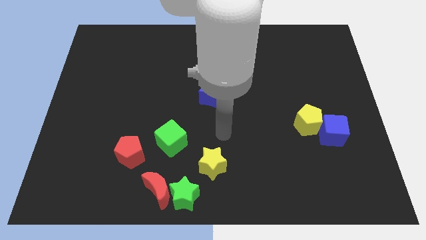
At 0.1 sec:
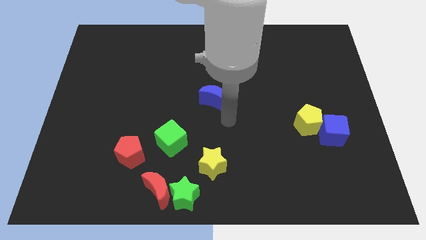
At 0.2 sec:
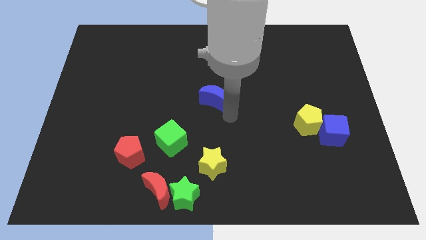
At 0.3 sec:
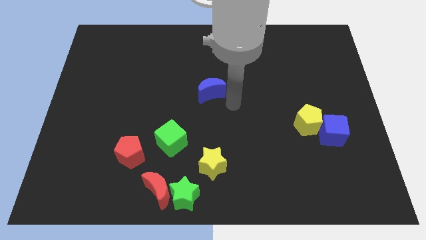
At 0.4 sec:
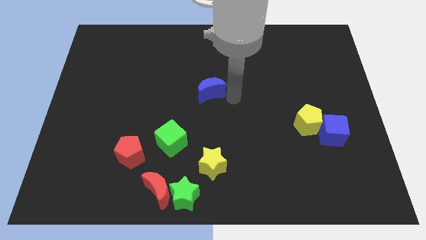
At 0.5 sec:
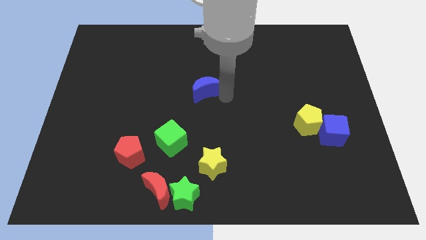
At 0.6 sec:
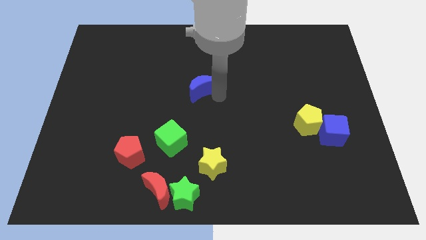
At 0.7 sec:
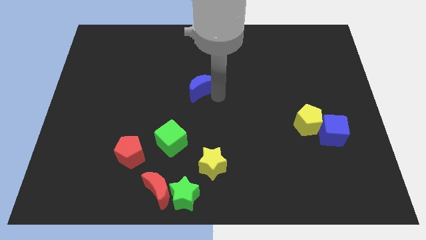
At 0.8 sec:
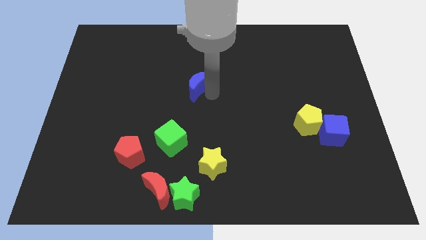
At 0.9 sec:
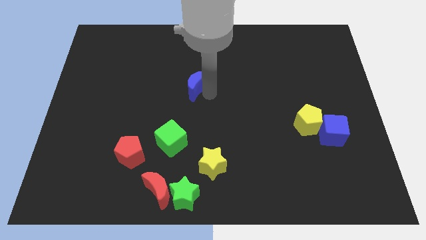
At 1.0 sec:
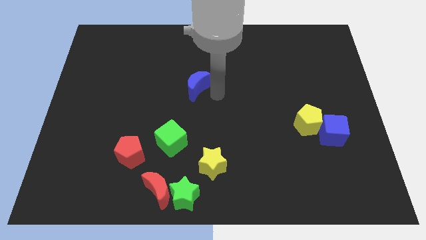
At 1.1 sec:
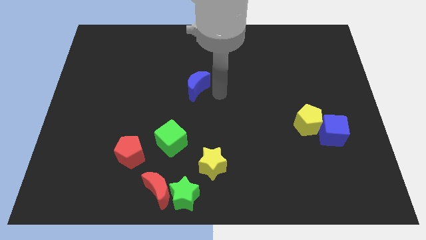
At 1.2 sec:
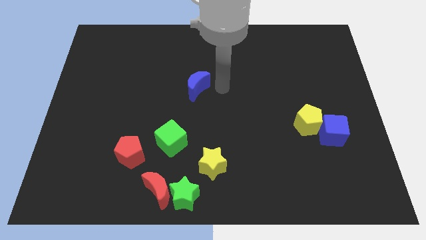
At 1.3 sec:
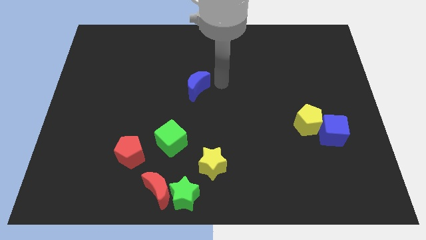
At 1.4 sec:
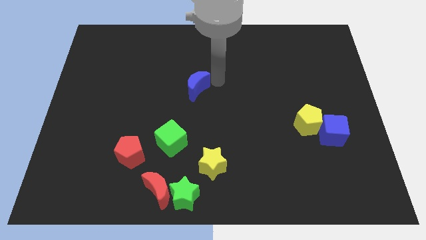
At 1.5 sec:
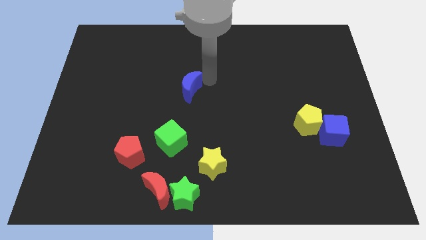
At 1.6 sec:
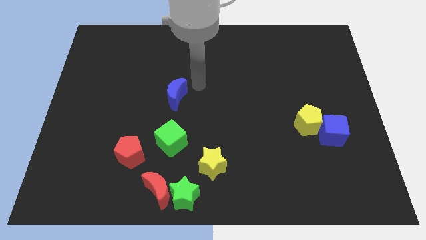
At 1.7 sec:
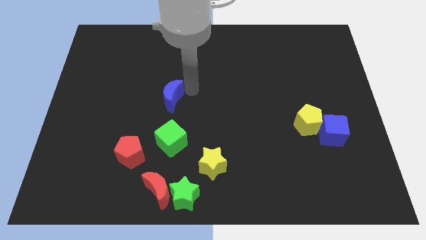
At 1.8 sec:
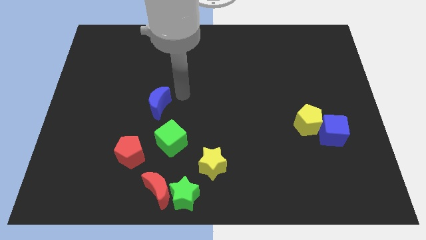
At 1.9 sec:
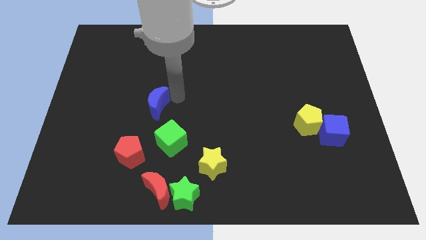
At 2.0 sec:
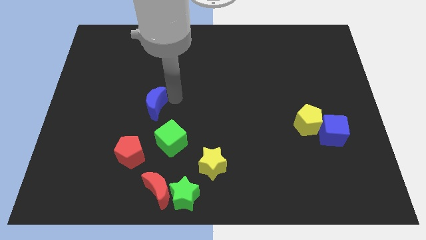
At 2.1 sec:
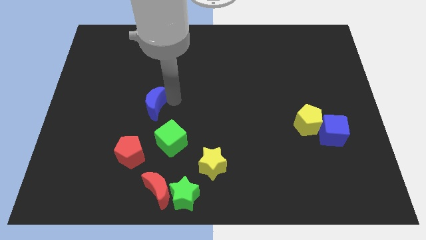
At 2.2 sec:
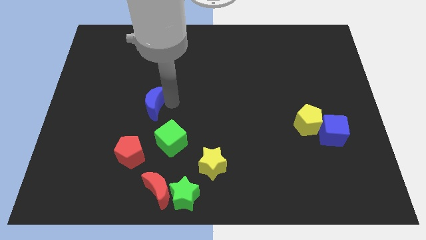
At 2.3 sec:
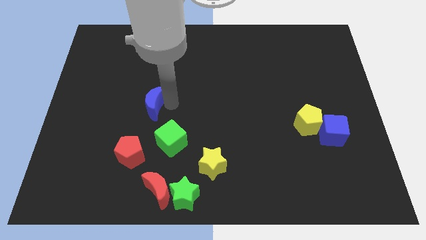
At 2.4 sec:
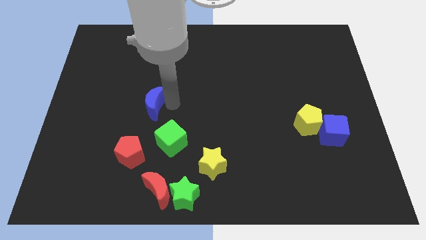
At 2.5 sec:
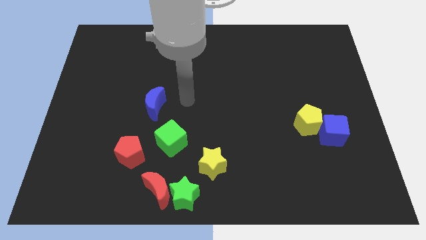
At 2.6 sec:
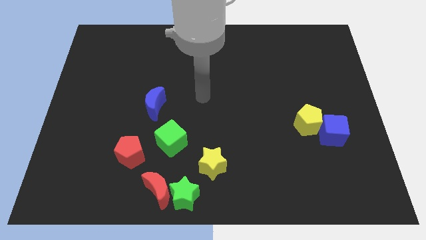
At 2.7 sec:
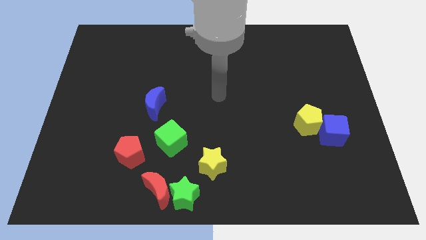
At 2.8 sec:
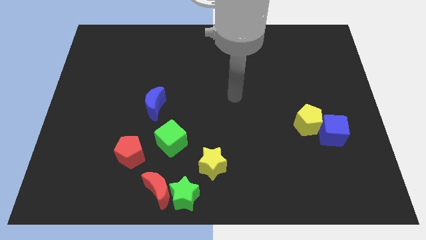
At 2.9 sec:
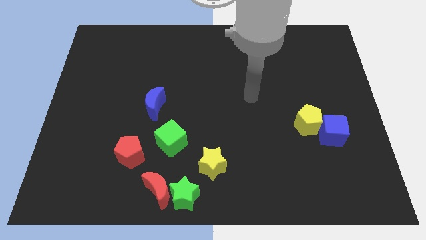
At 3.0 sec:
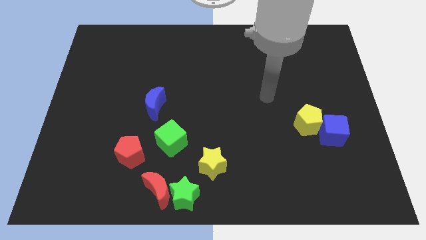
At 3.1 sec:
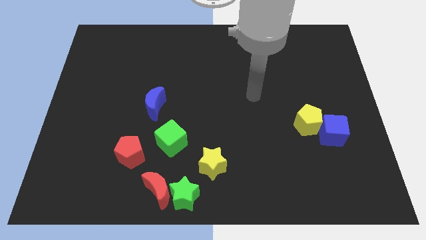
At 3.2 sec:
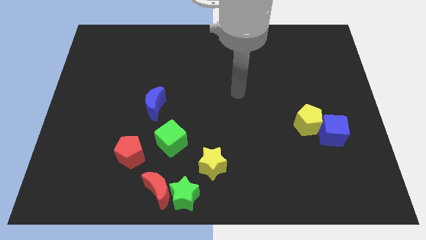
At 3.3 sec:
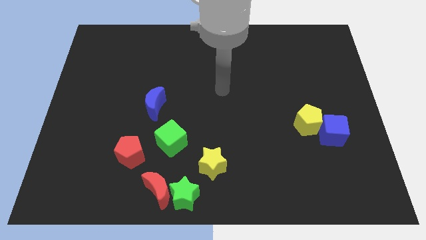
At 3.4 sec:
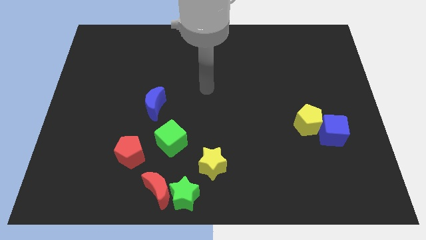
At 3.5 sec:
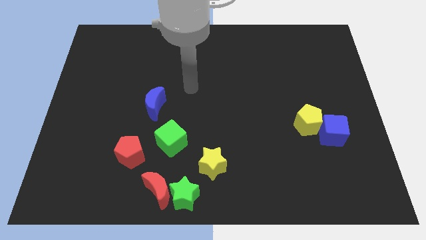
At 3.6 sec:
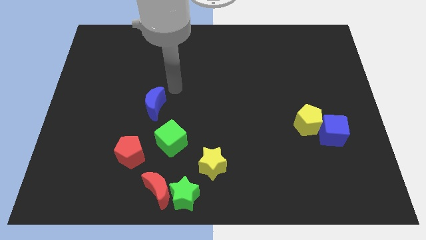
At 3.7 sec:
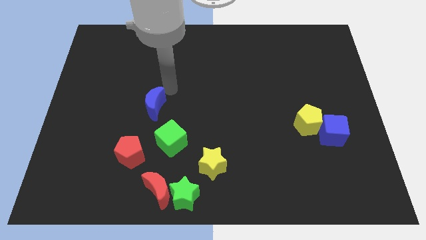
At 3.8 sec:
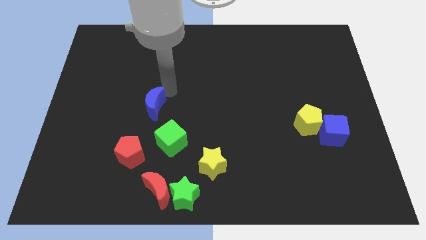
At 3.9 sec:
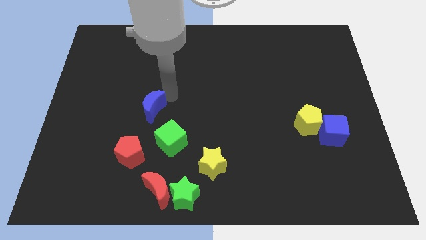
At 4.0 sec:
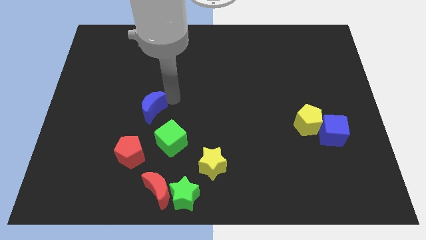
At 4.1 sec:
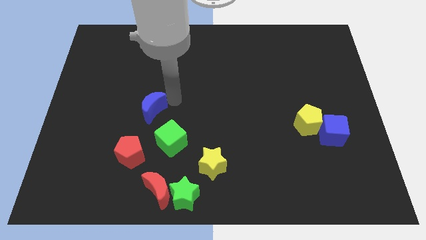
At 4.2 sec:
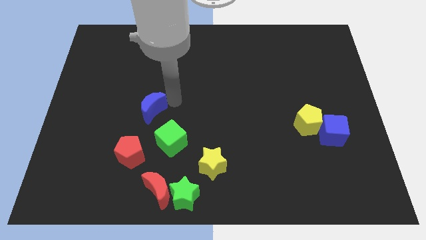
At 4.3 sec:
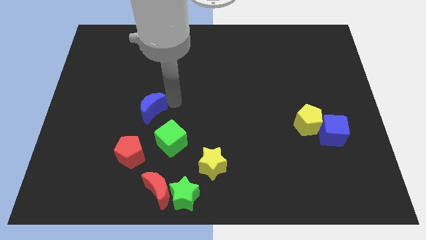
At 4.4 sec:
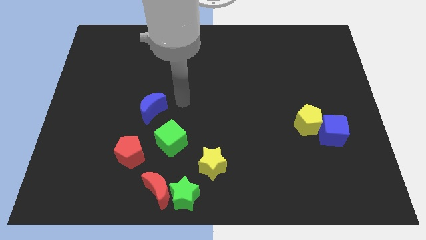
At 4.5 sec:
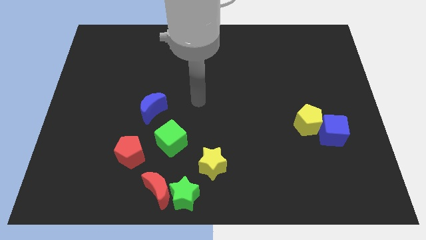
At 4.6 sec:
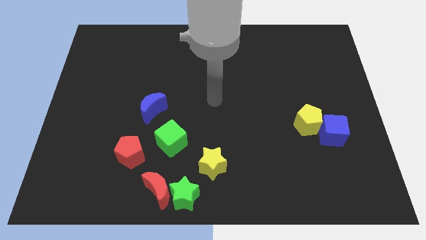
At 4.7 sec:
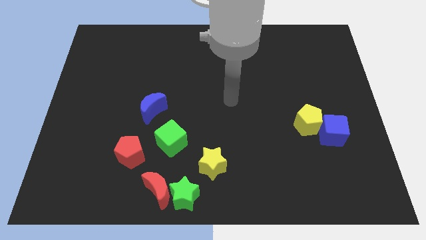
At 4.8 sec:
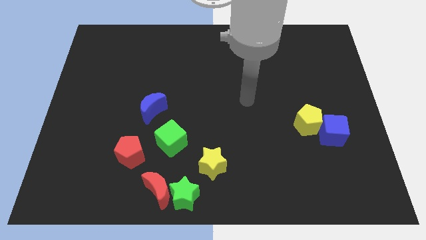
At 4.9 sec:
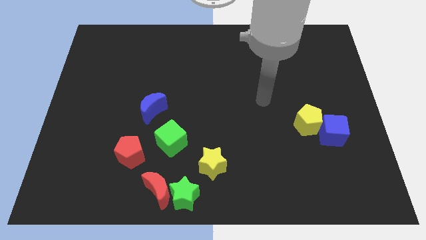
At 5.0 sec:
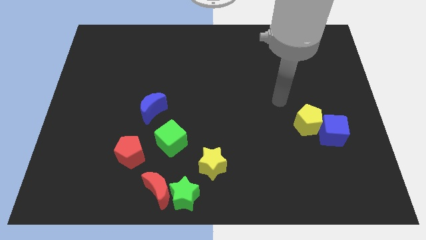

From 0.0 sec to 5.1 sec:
move blue moon to the top right of red pentagon diagonally

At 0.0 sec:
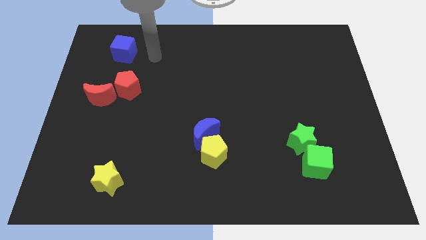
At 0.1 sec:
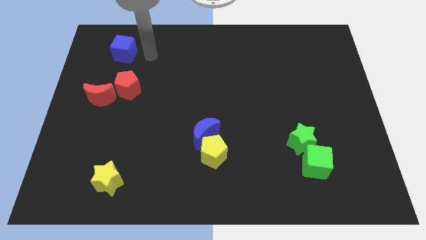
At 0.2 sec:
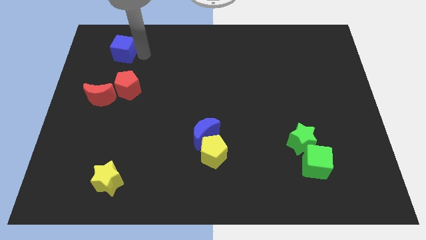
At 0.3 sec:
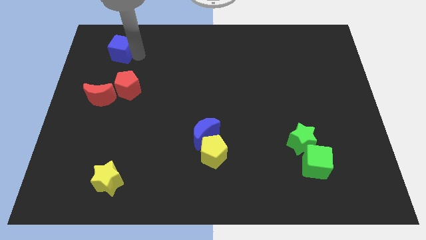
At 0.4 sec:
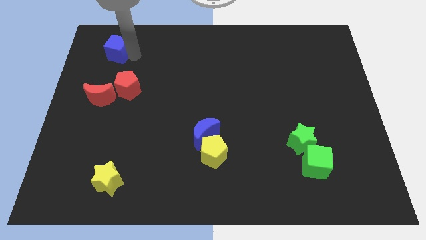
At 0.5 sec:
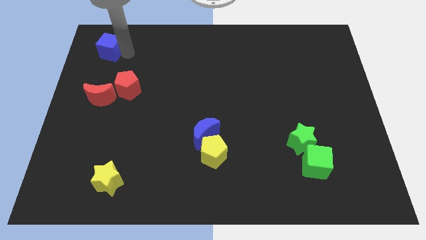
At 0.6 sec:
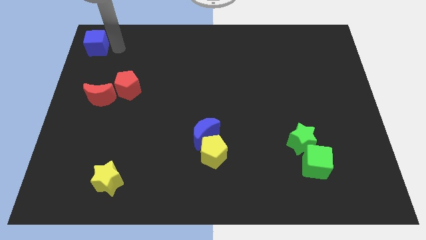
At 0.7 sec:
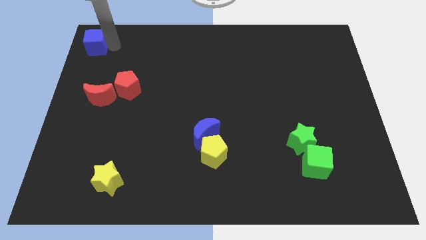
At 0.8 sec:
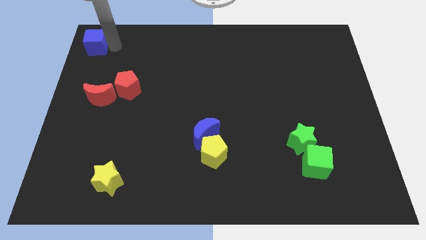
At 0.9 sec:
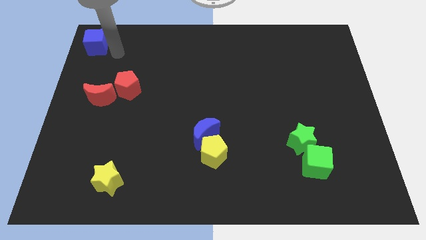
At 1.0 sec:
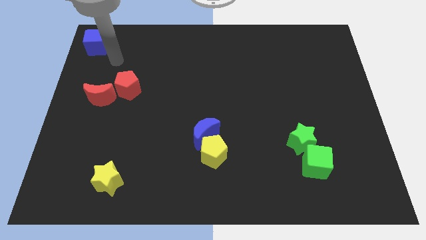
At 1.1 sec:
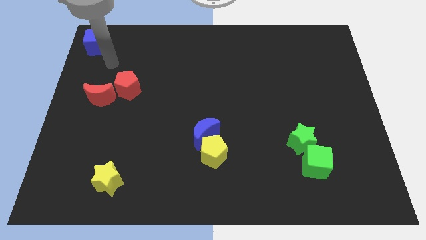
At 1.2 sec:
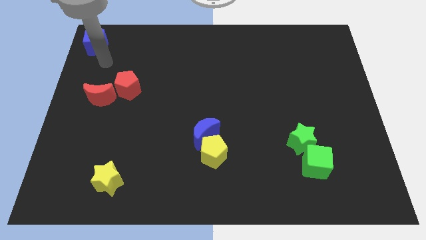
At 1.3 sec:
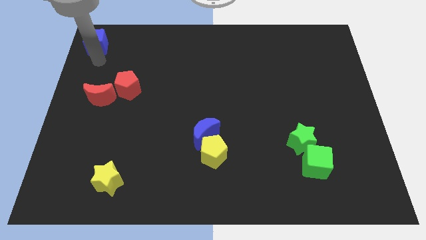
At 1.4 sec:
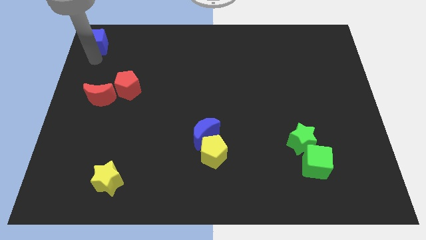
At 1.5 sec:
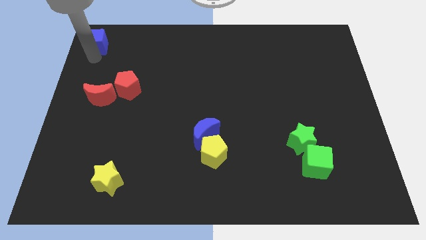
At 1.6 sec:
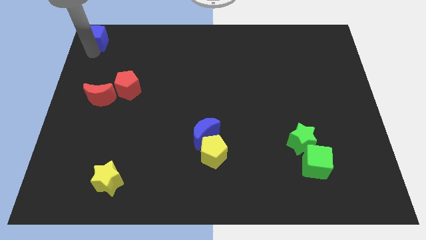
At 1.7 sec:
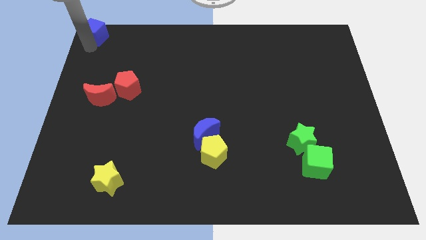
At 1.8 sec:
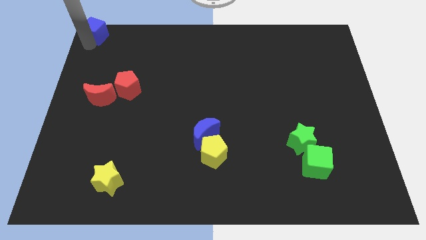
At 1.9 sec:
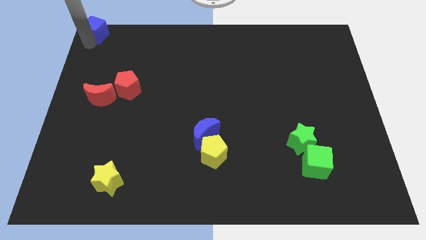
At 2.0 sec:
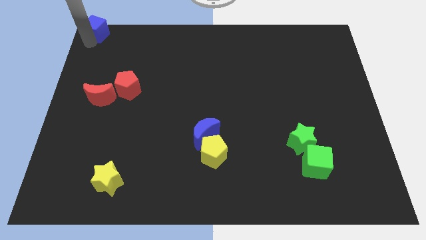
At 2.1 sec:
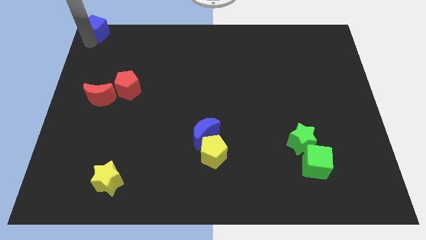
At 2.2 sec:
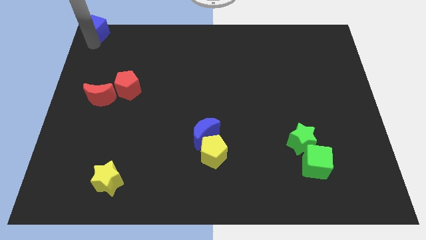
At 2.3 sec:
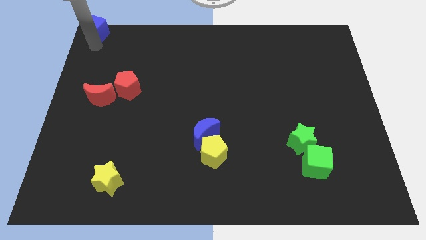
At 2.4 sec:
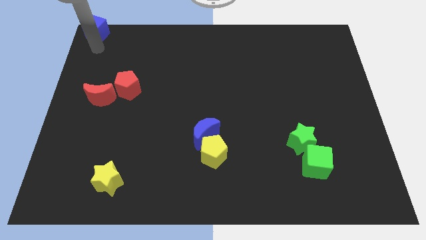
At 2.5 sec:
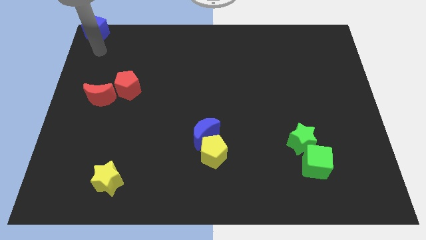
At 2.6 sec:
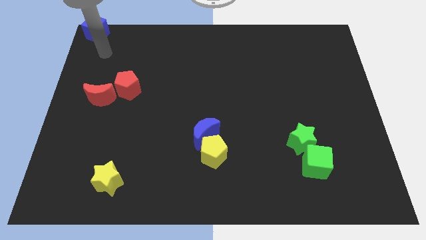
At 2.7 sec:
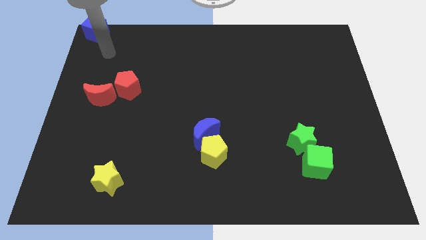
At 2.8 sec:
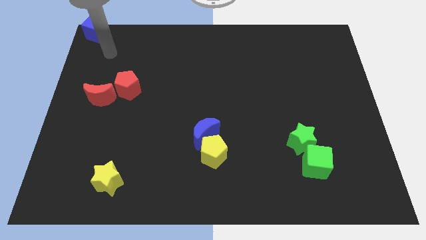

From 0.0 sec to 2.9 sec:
place the blue cube at the top left corner of the board

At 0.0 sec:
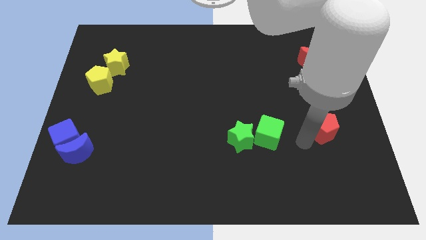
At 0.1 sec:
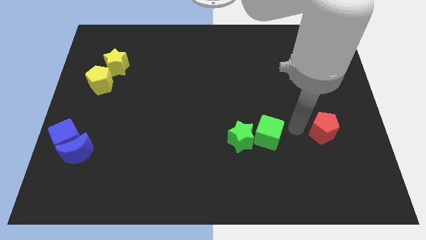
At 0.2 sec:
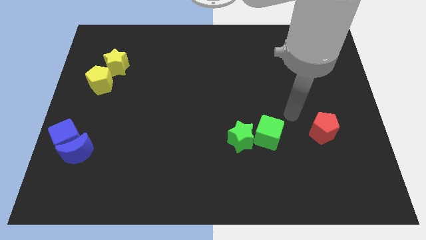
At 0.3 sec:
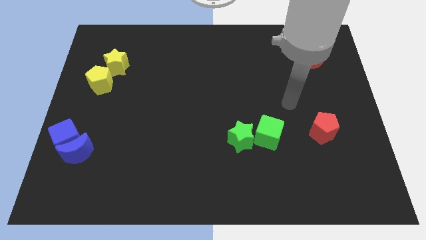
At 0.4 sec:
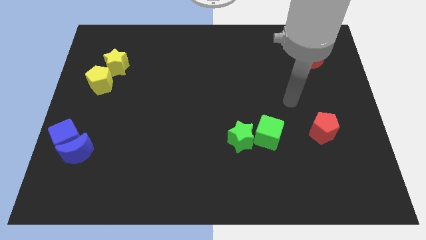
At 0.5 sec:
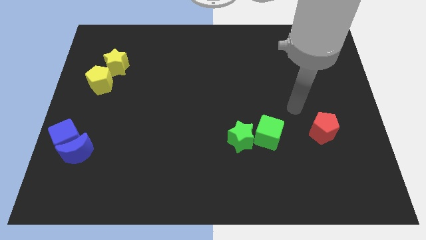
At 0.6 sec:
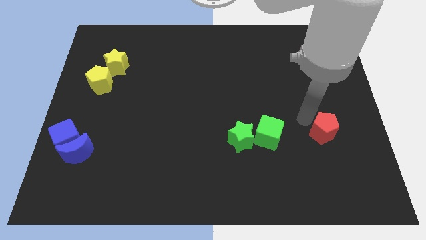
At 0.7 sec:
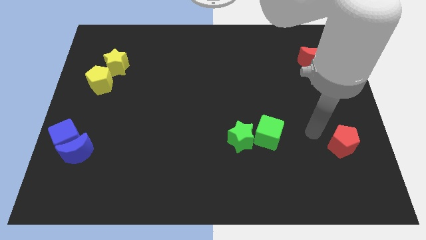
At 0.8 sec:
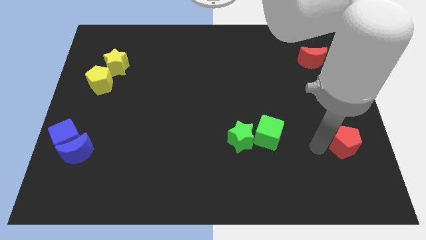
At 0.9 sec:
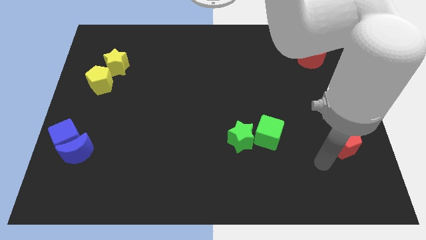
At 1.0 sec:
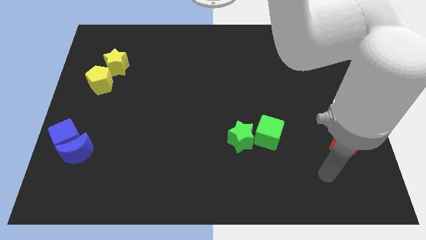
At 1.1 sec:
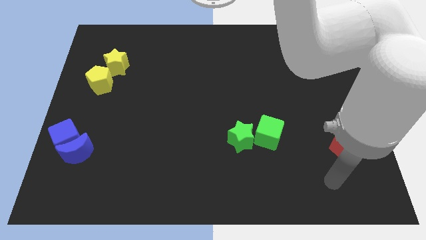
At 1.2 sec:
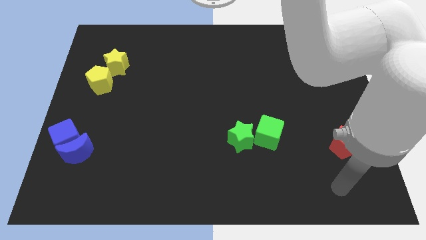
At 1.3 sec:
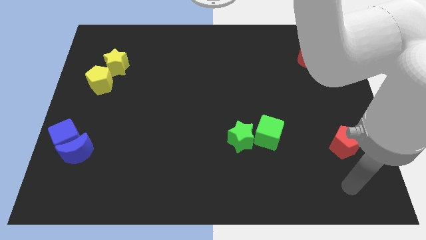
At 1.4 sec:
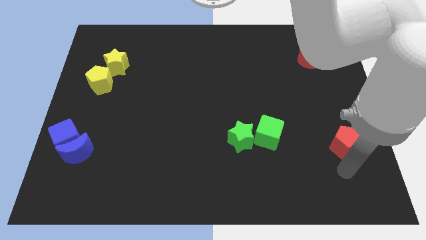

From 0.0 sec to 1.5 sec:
push the red pentagon to the right side of the board
